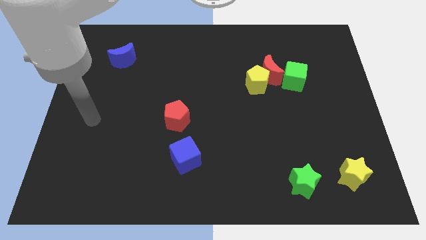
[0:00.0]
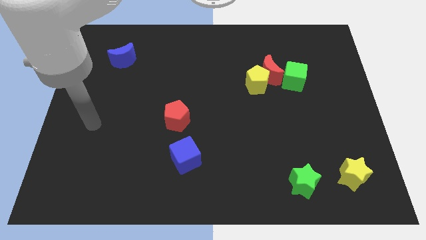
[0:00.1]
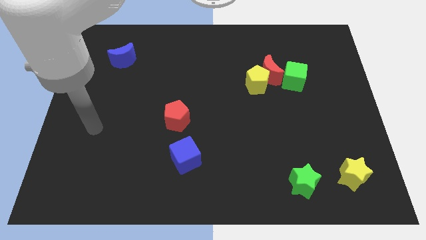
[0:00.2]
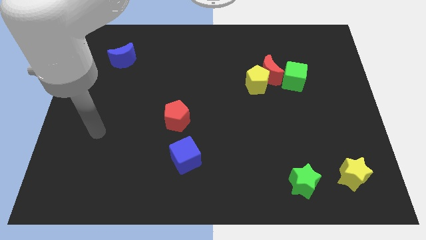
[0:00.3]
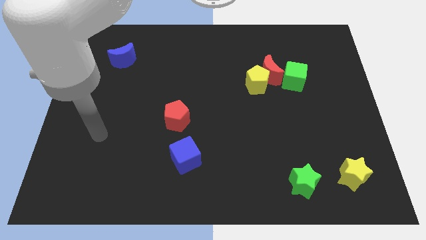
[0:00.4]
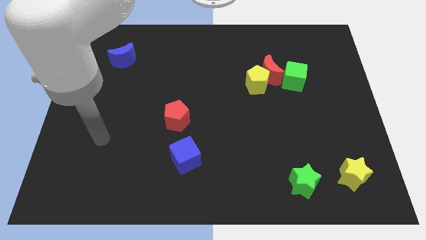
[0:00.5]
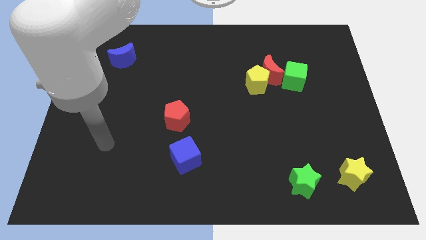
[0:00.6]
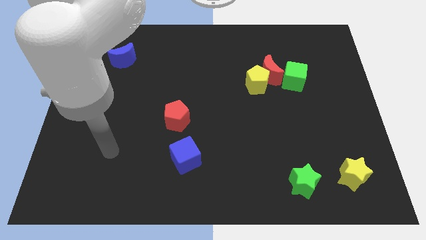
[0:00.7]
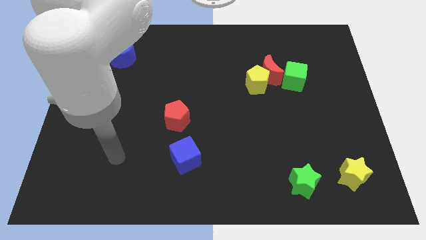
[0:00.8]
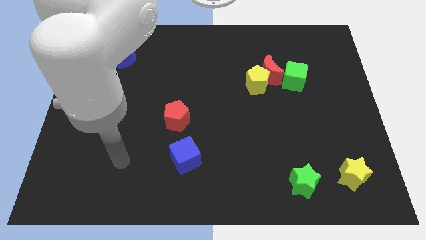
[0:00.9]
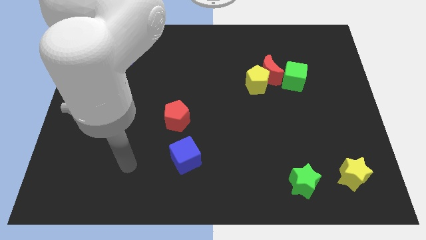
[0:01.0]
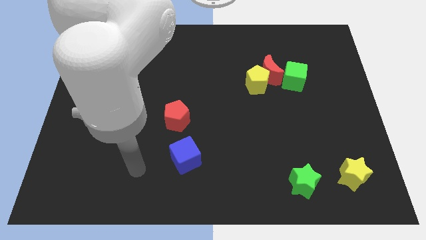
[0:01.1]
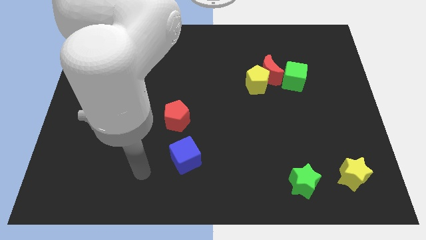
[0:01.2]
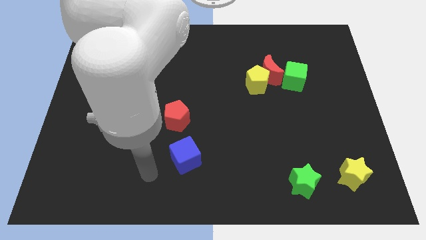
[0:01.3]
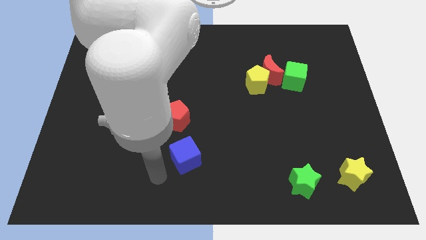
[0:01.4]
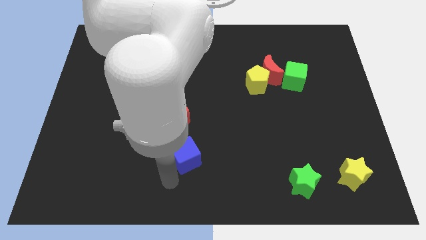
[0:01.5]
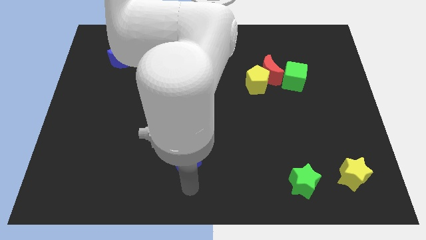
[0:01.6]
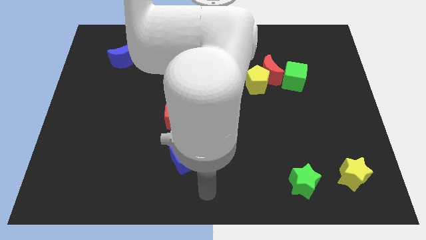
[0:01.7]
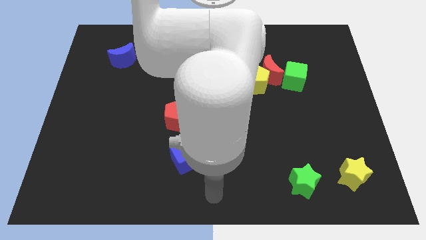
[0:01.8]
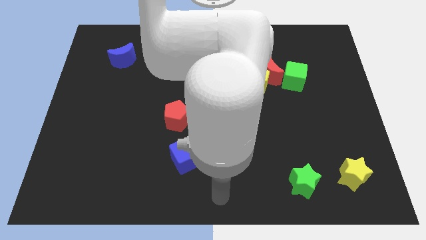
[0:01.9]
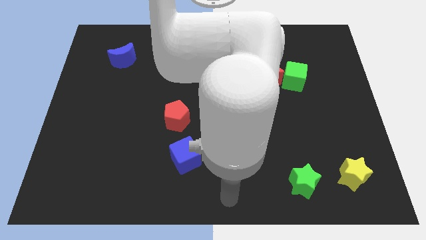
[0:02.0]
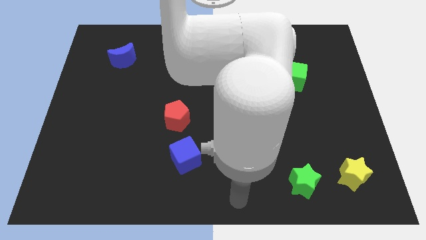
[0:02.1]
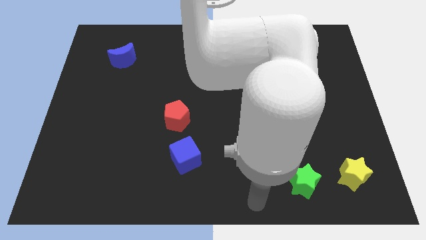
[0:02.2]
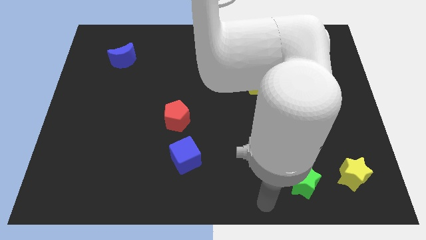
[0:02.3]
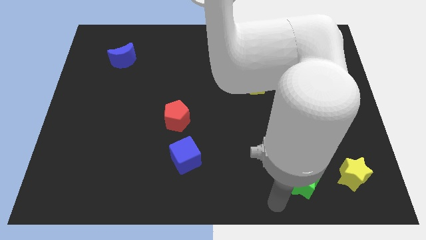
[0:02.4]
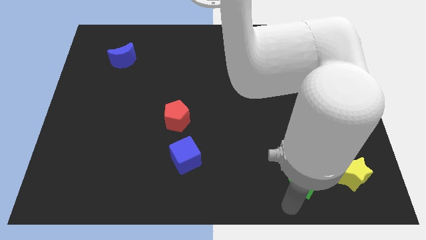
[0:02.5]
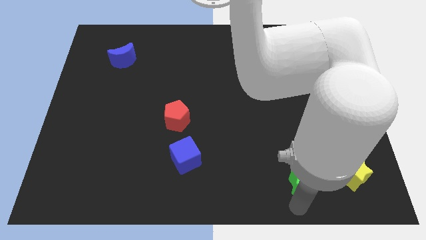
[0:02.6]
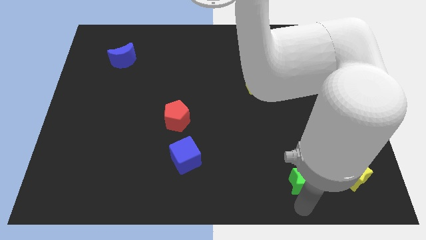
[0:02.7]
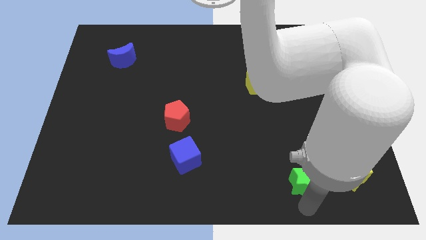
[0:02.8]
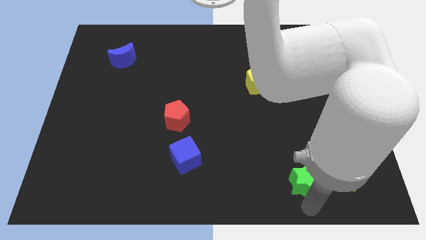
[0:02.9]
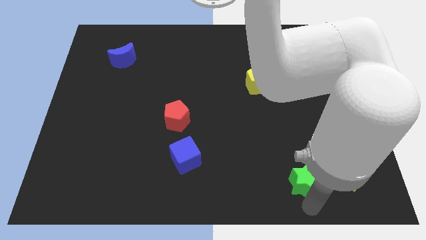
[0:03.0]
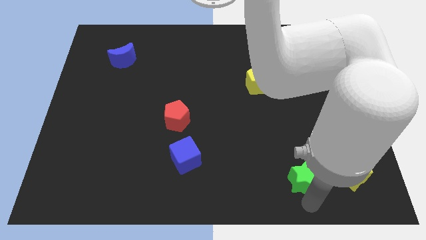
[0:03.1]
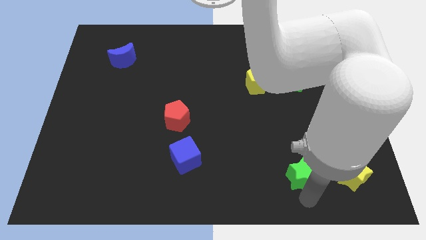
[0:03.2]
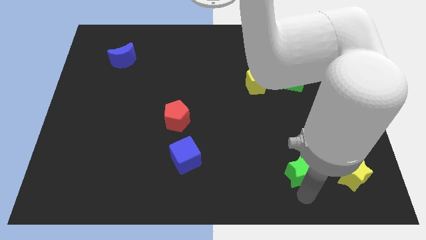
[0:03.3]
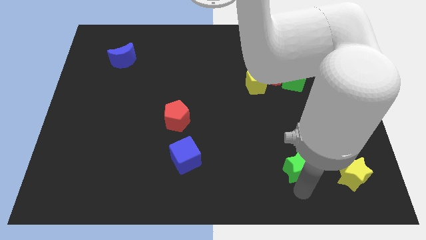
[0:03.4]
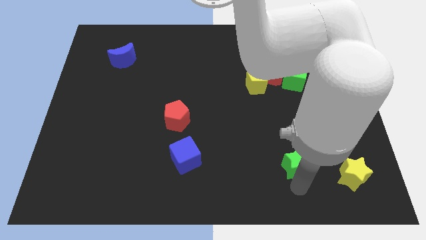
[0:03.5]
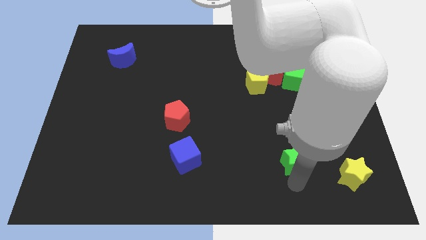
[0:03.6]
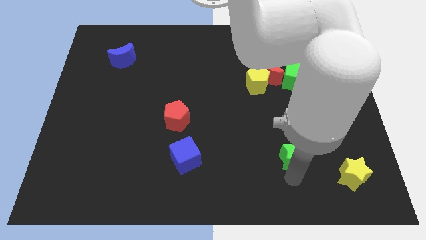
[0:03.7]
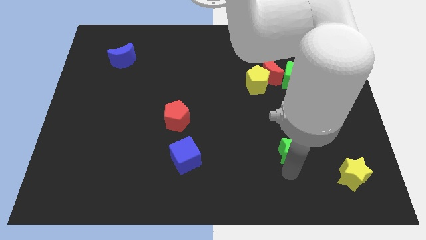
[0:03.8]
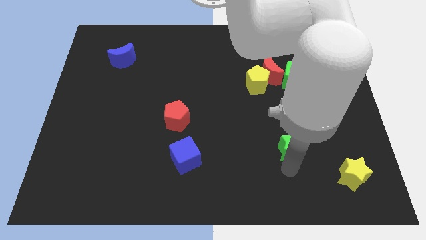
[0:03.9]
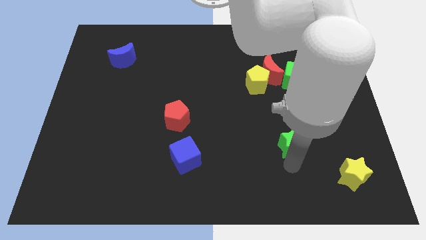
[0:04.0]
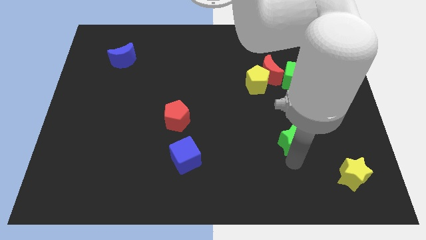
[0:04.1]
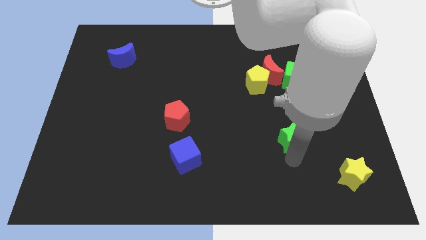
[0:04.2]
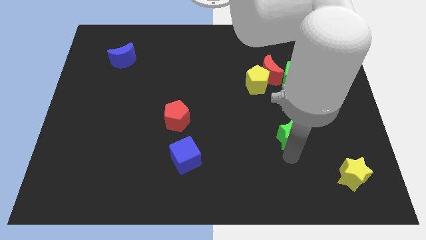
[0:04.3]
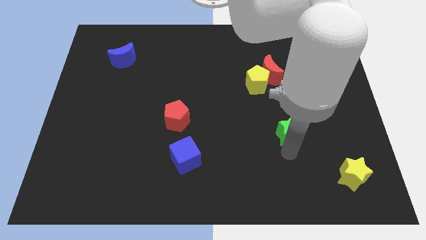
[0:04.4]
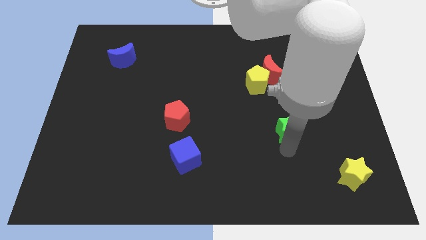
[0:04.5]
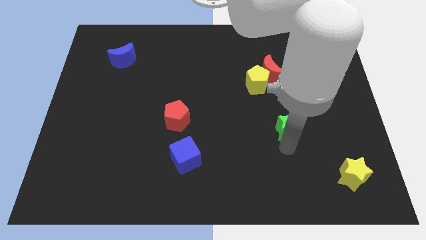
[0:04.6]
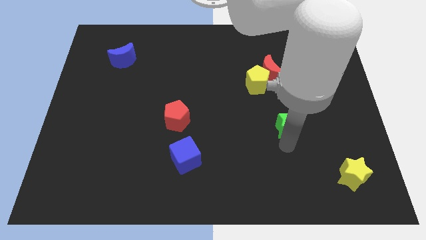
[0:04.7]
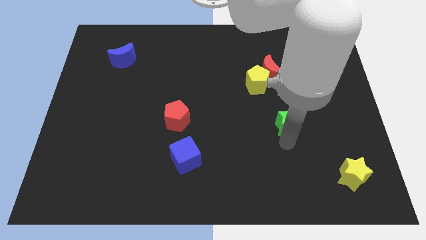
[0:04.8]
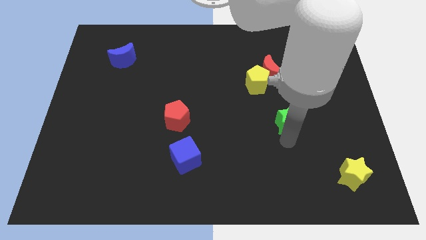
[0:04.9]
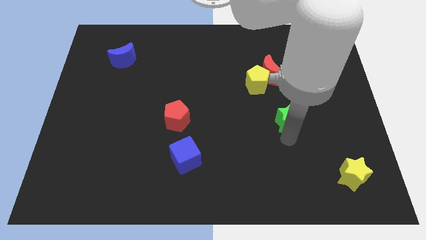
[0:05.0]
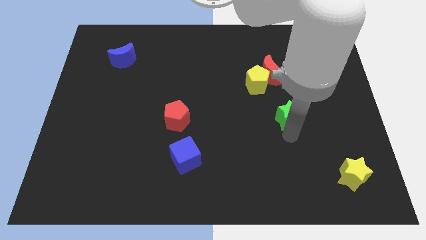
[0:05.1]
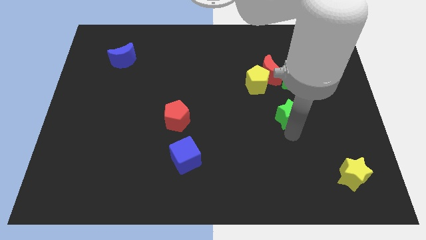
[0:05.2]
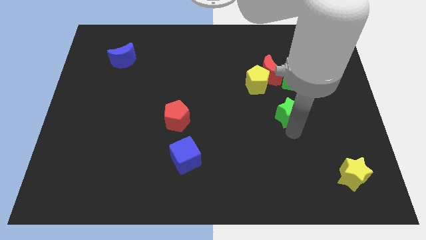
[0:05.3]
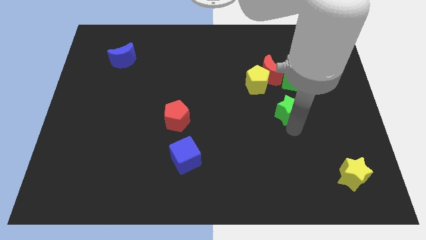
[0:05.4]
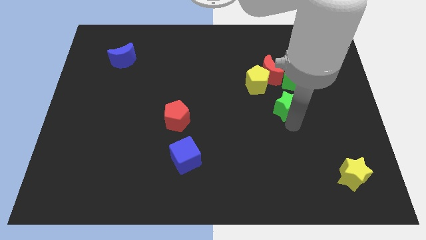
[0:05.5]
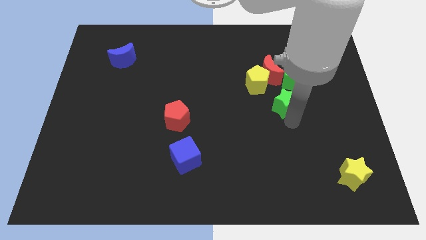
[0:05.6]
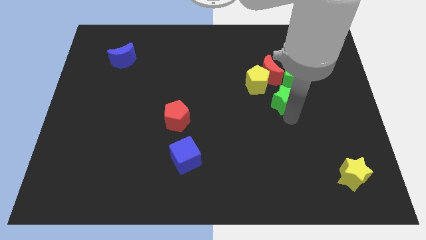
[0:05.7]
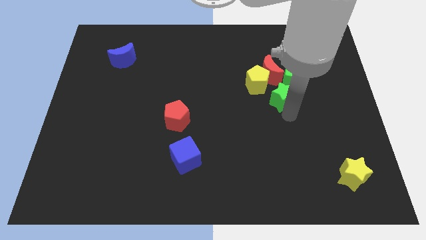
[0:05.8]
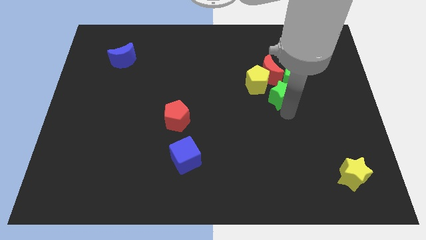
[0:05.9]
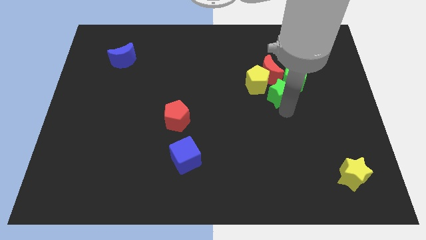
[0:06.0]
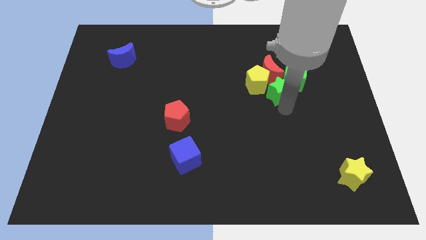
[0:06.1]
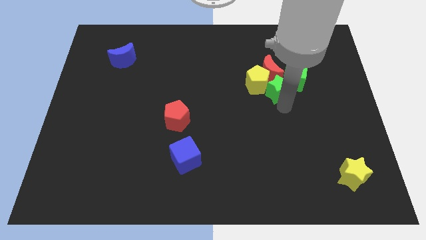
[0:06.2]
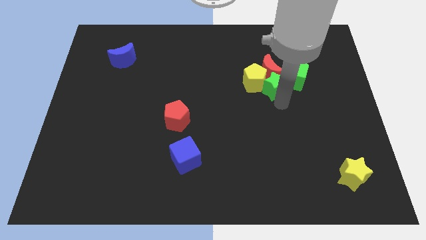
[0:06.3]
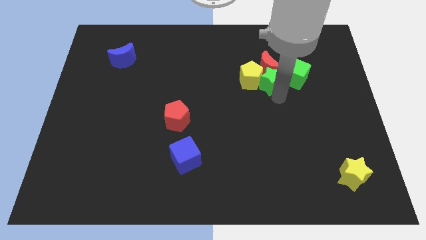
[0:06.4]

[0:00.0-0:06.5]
put the green star towards the red moon

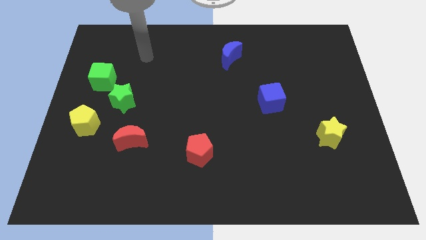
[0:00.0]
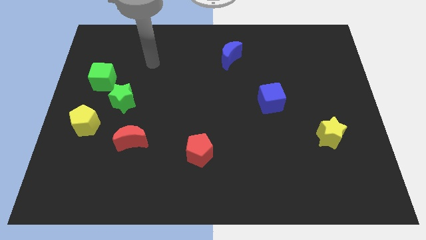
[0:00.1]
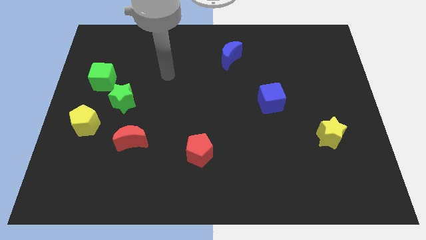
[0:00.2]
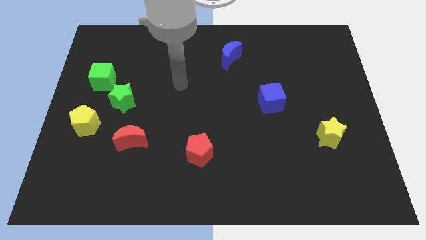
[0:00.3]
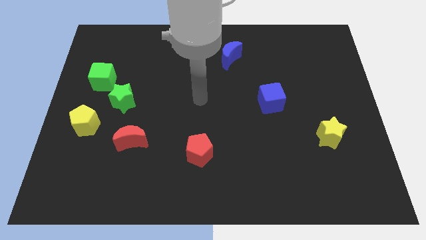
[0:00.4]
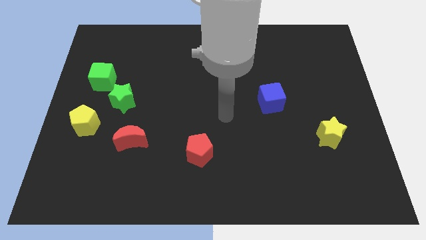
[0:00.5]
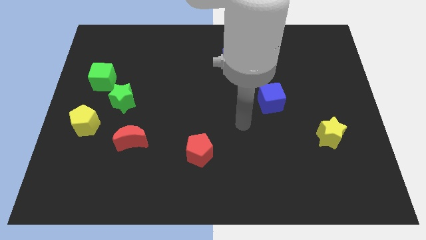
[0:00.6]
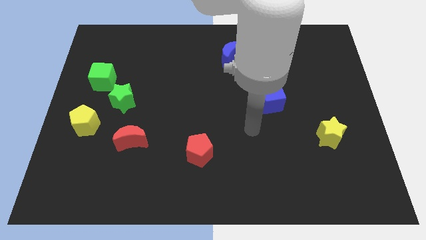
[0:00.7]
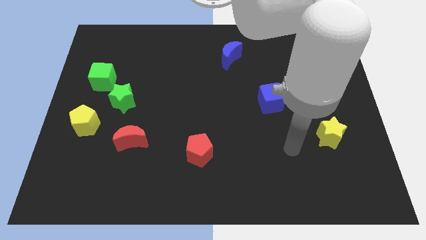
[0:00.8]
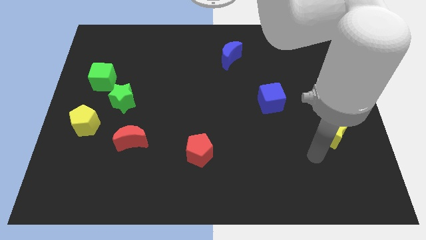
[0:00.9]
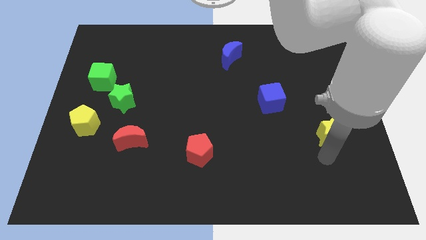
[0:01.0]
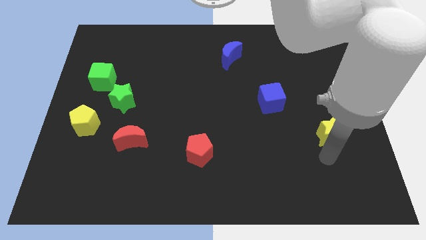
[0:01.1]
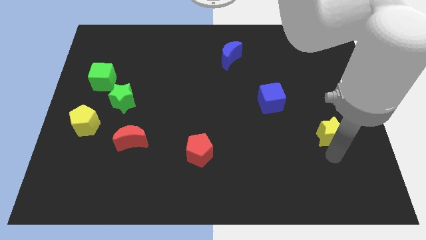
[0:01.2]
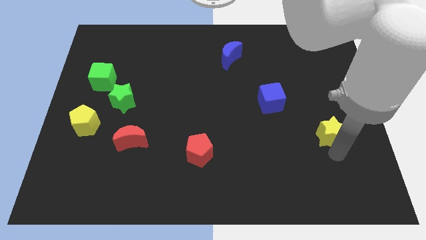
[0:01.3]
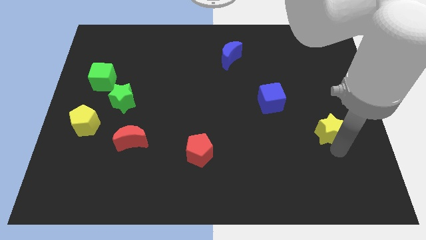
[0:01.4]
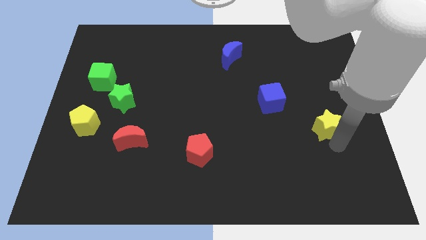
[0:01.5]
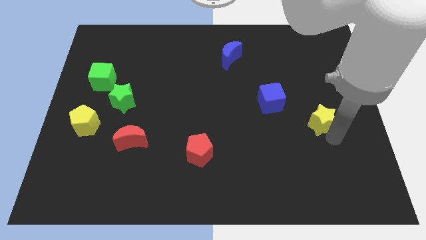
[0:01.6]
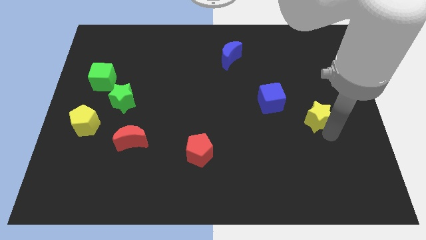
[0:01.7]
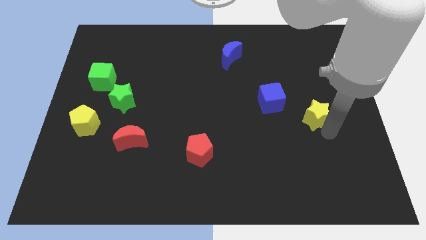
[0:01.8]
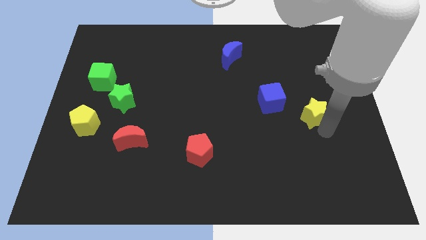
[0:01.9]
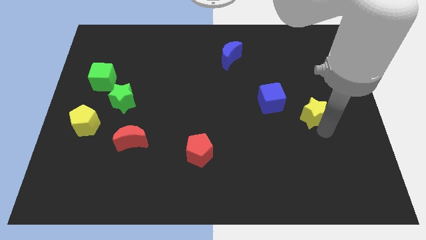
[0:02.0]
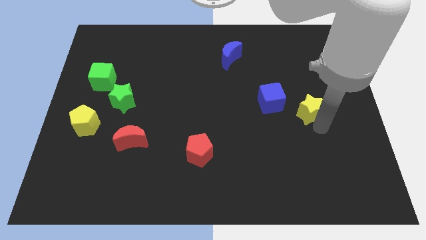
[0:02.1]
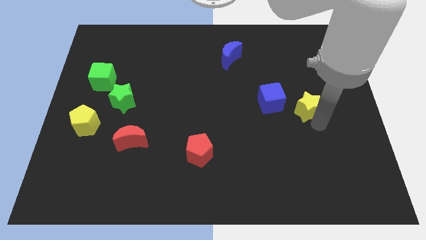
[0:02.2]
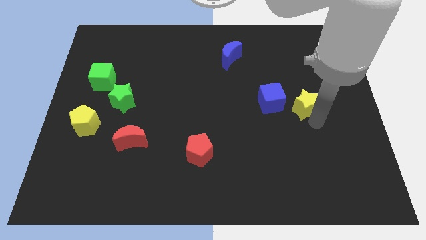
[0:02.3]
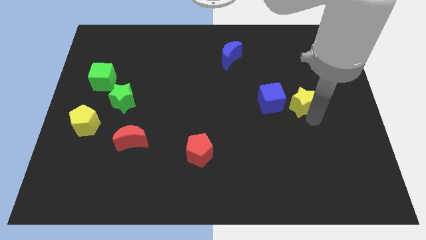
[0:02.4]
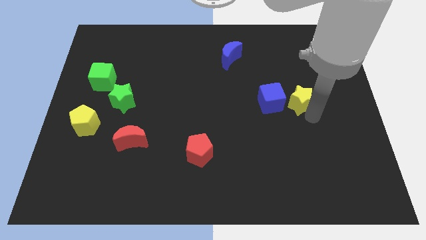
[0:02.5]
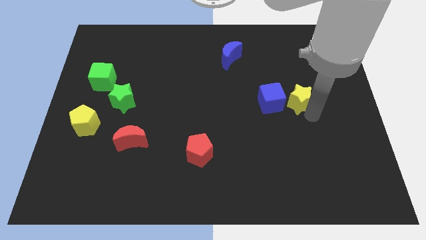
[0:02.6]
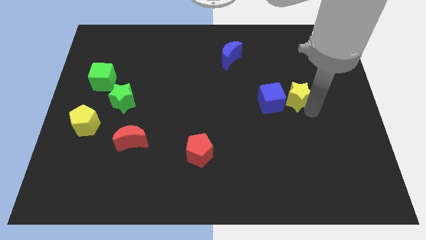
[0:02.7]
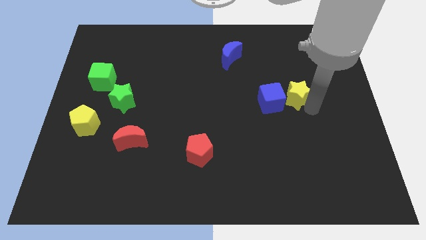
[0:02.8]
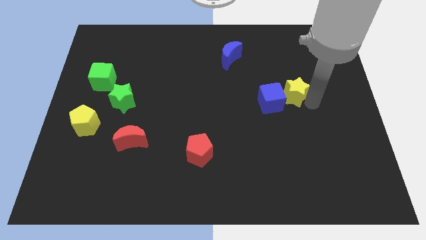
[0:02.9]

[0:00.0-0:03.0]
push the yellow star next to the blue cube
